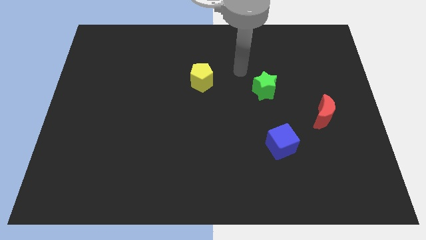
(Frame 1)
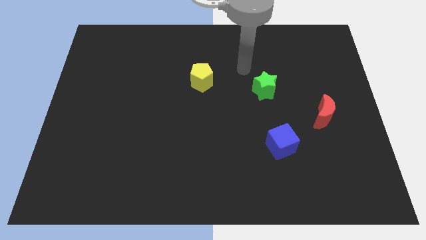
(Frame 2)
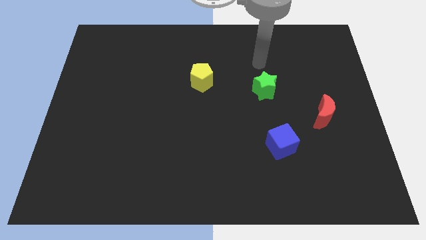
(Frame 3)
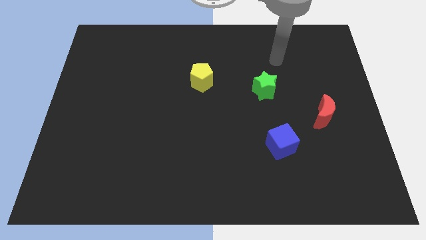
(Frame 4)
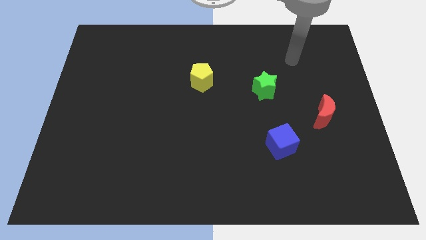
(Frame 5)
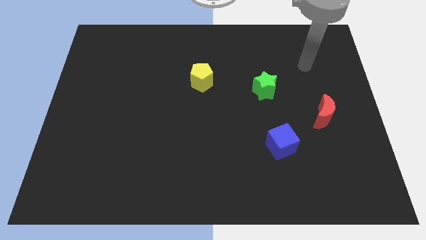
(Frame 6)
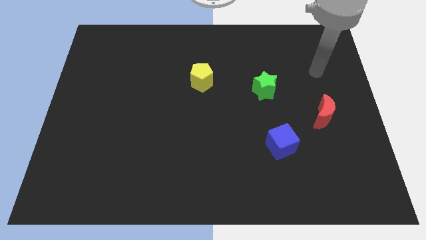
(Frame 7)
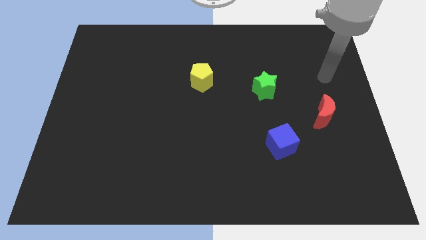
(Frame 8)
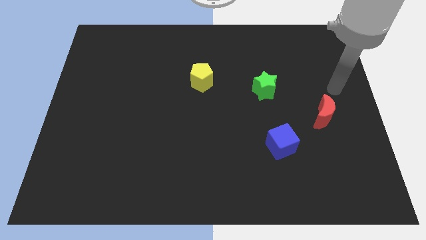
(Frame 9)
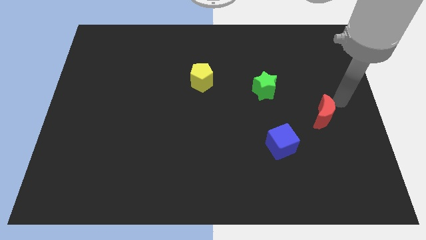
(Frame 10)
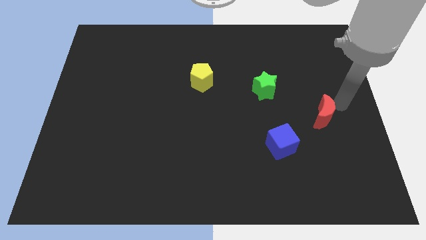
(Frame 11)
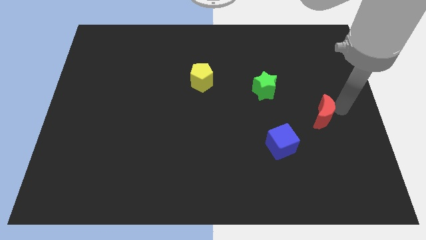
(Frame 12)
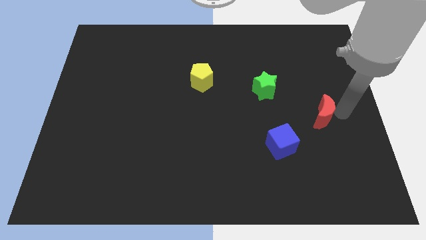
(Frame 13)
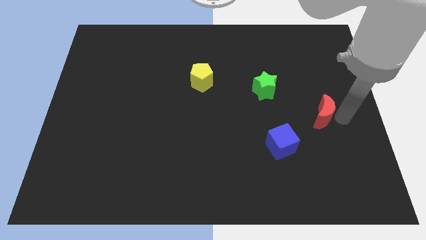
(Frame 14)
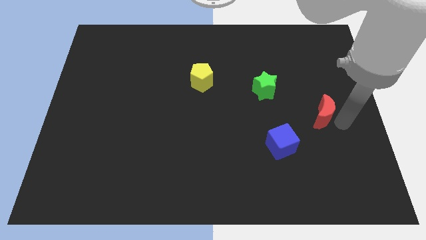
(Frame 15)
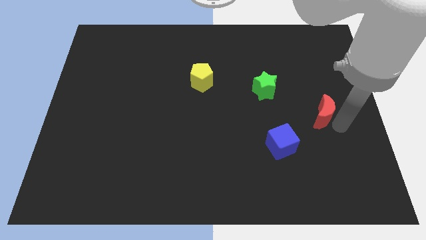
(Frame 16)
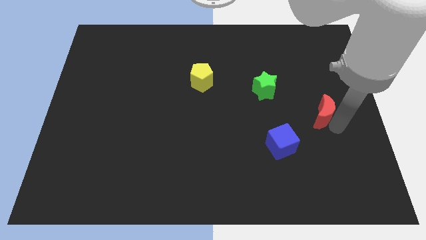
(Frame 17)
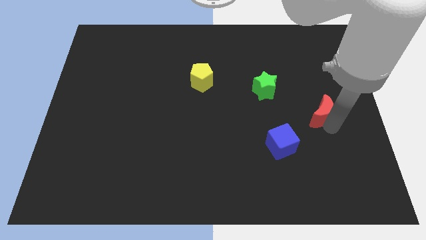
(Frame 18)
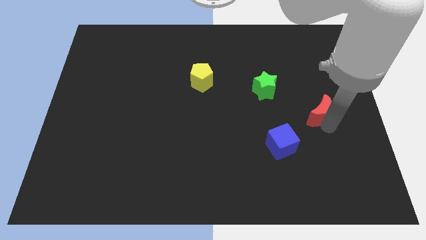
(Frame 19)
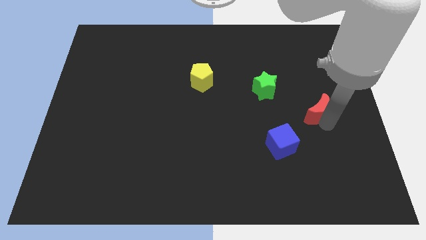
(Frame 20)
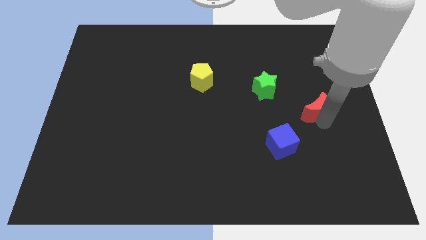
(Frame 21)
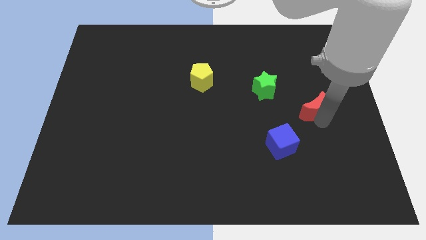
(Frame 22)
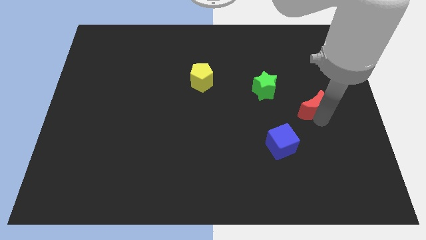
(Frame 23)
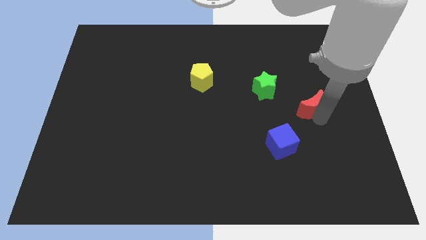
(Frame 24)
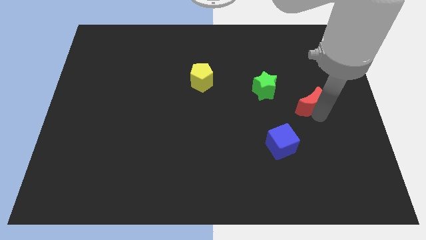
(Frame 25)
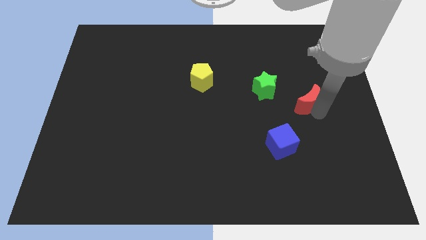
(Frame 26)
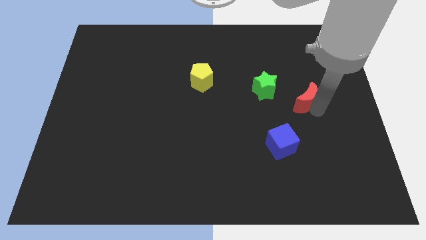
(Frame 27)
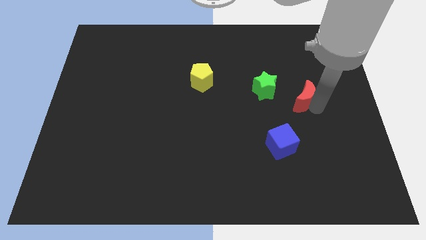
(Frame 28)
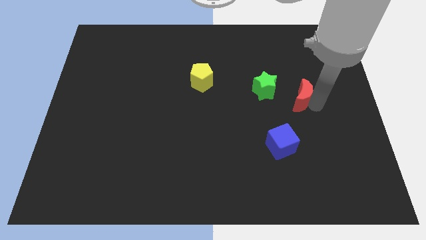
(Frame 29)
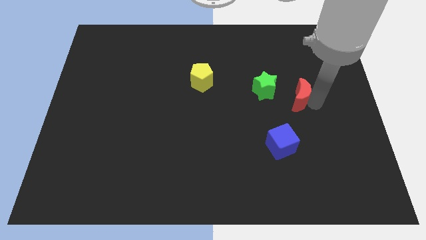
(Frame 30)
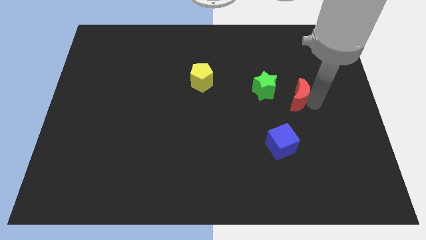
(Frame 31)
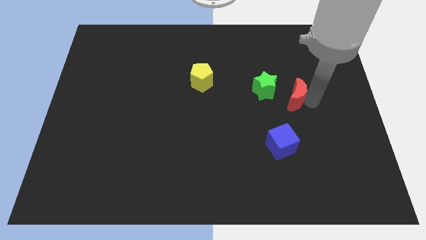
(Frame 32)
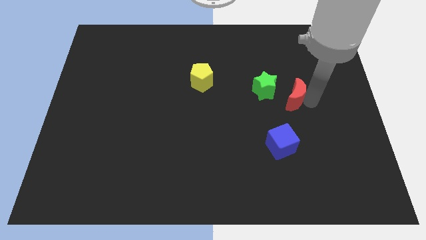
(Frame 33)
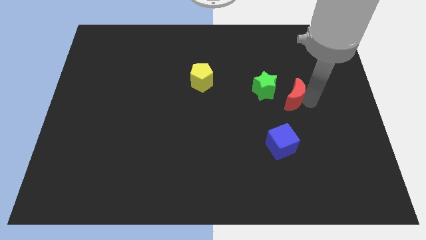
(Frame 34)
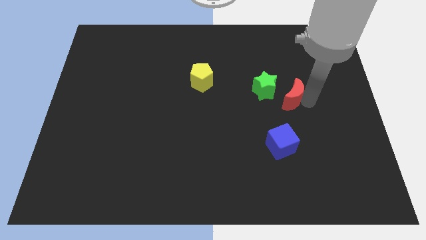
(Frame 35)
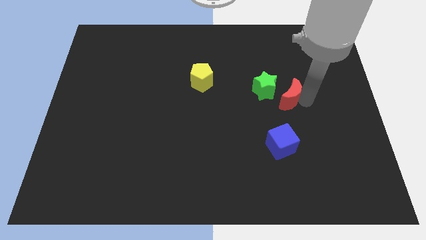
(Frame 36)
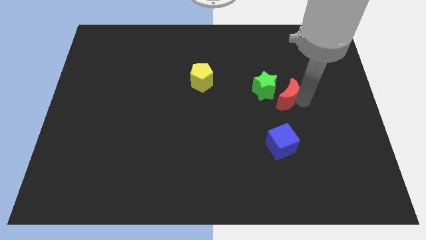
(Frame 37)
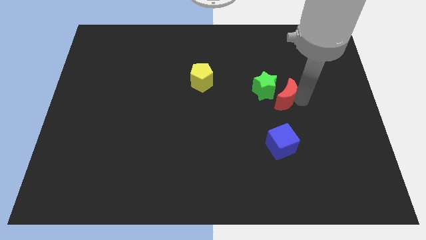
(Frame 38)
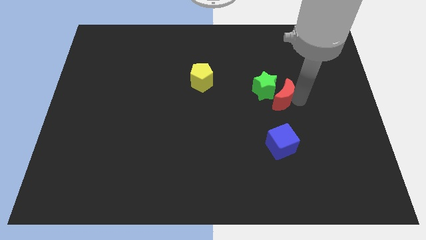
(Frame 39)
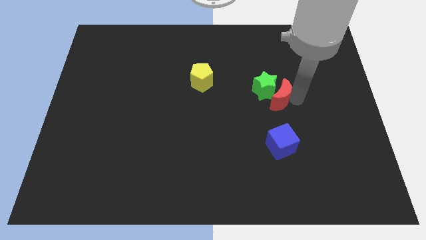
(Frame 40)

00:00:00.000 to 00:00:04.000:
put the moon to the green block

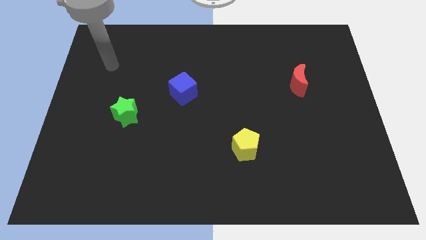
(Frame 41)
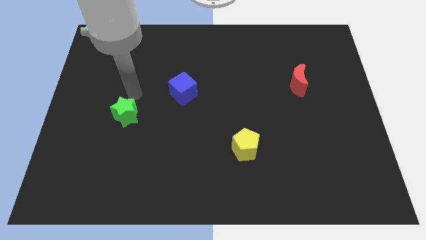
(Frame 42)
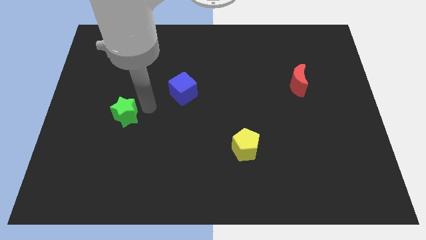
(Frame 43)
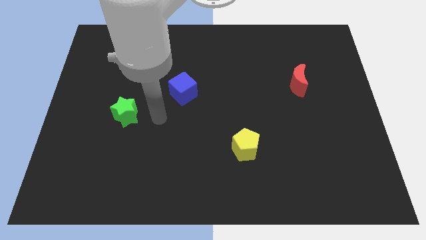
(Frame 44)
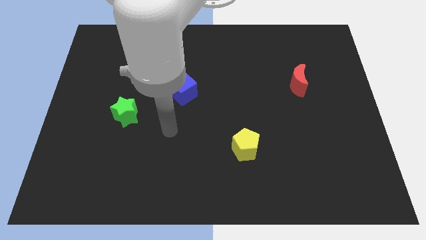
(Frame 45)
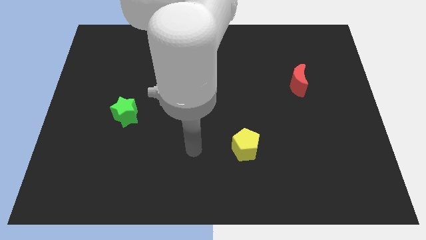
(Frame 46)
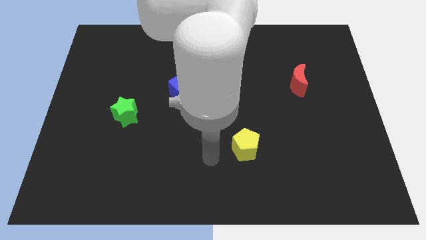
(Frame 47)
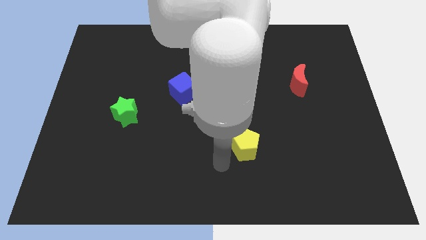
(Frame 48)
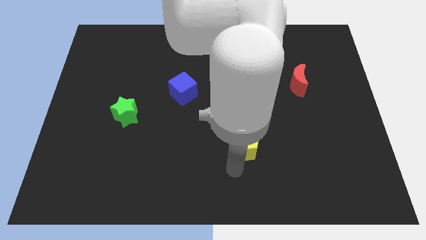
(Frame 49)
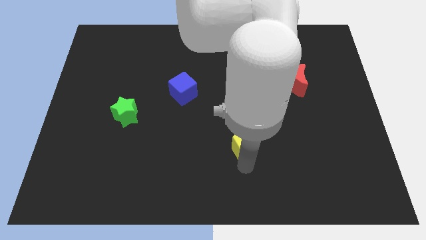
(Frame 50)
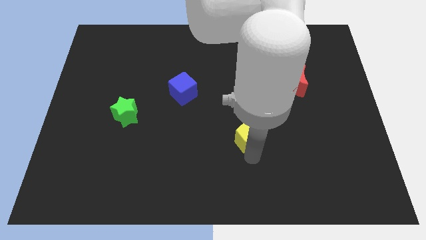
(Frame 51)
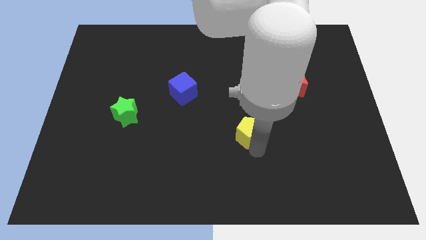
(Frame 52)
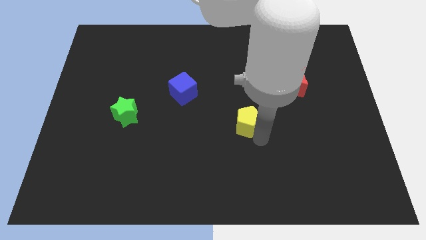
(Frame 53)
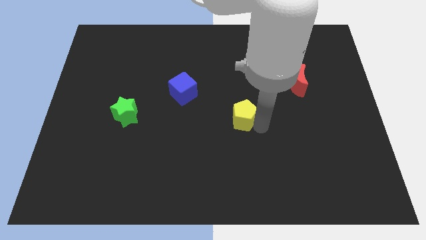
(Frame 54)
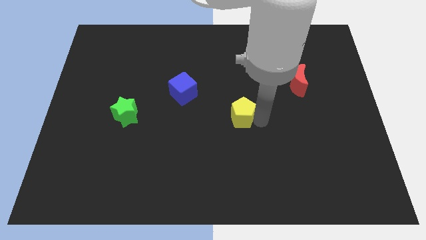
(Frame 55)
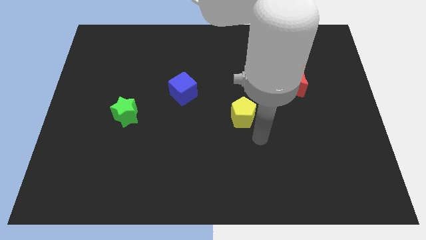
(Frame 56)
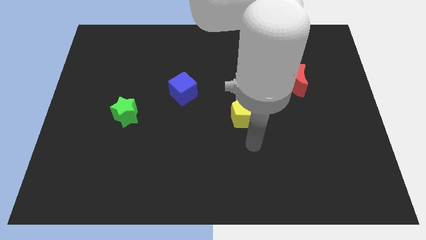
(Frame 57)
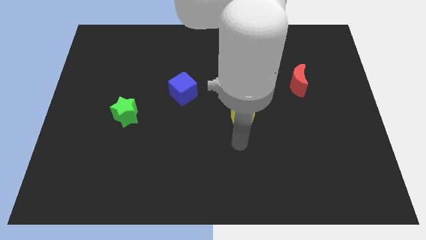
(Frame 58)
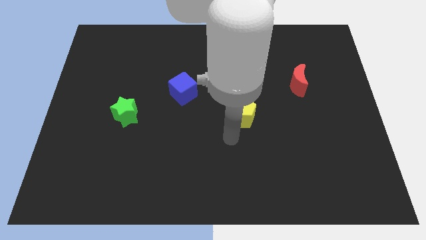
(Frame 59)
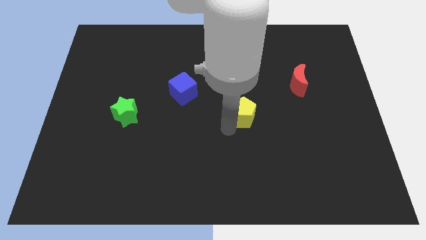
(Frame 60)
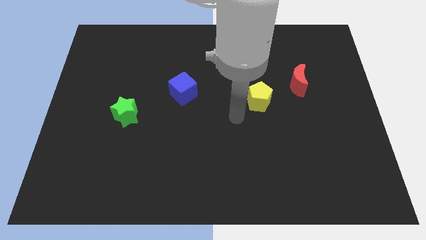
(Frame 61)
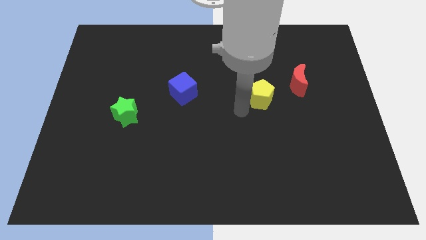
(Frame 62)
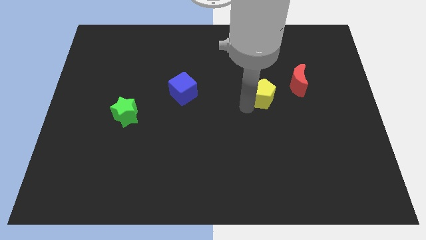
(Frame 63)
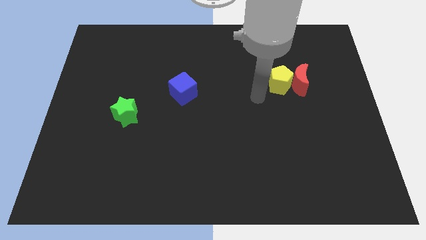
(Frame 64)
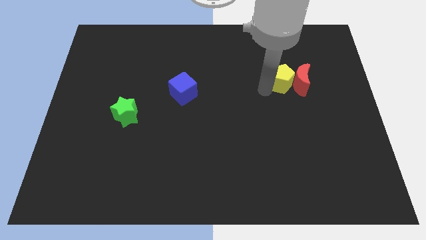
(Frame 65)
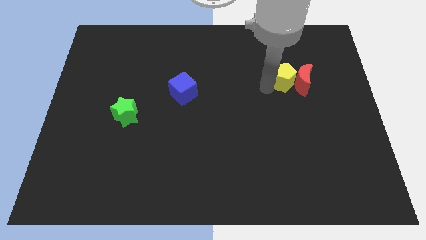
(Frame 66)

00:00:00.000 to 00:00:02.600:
slide the yellow block to the moon

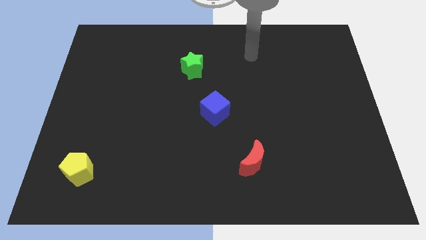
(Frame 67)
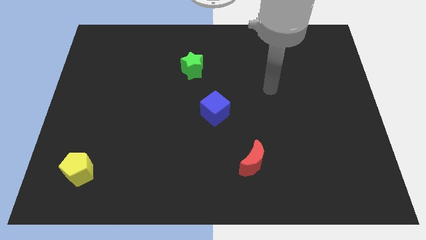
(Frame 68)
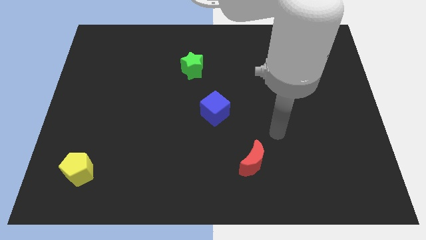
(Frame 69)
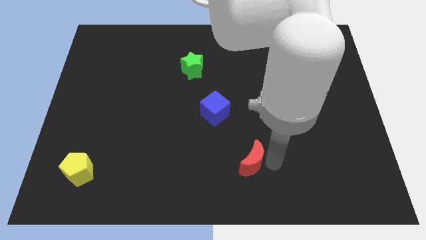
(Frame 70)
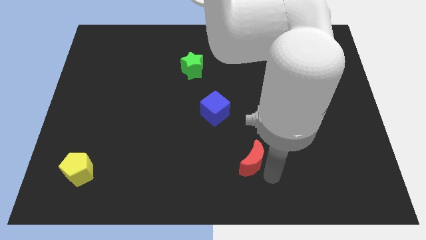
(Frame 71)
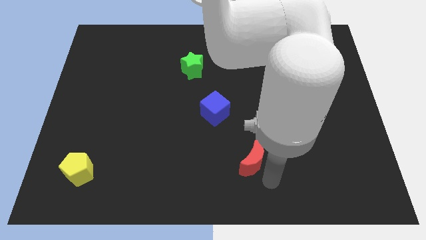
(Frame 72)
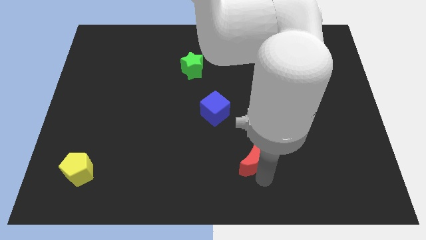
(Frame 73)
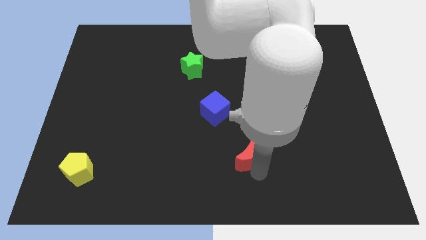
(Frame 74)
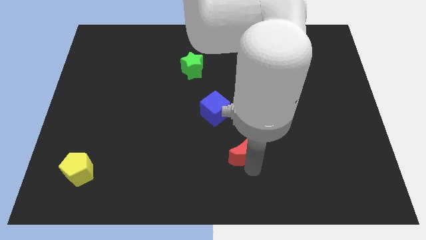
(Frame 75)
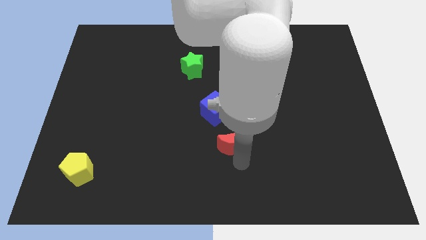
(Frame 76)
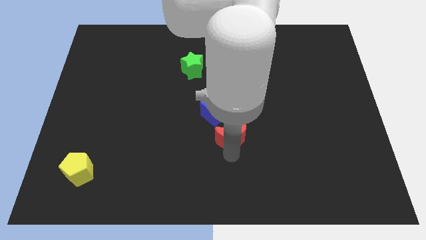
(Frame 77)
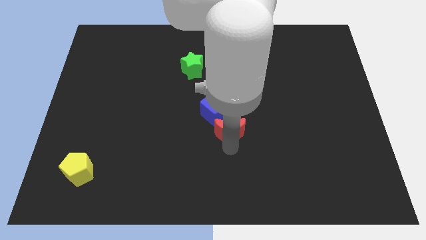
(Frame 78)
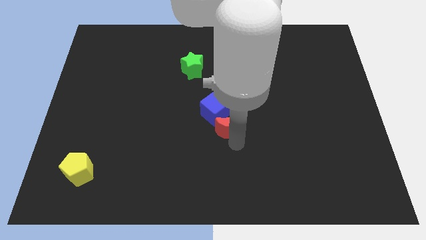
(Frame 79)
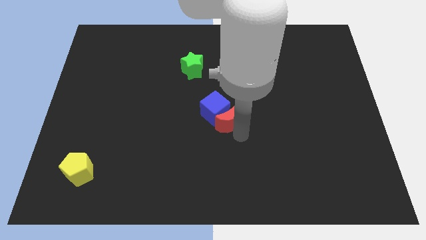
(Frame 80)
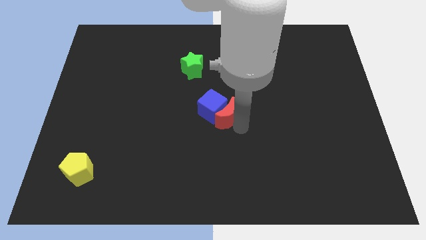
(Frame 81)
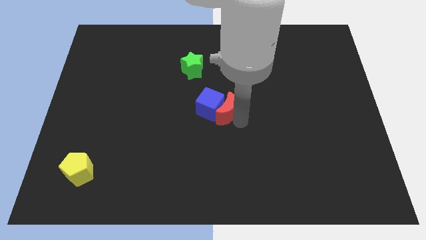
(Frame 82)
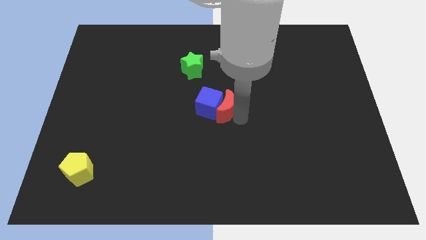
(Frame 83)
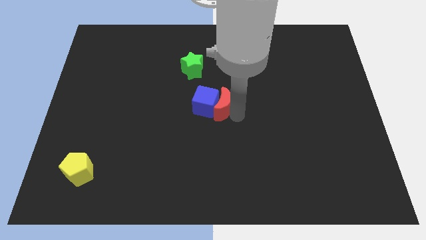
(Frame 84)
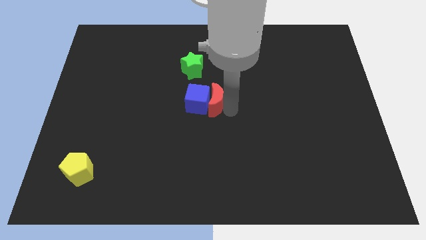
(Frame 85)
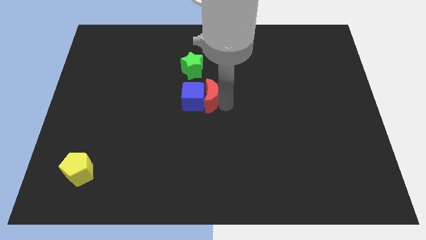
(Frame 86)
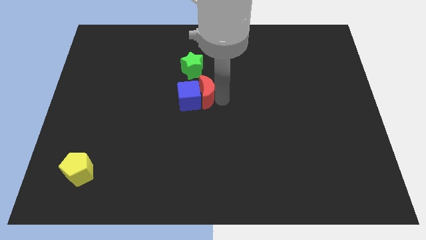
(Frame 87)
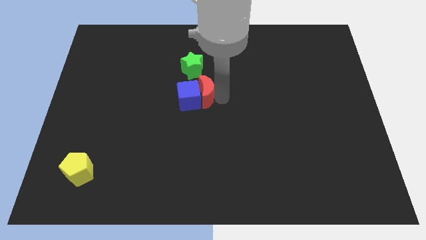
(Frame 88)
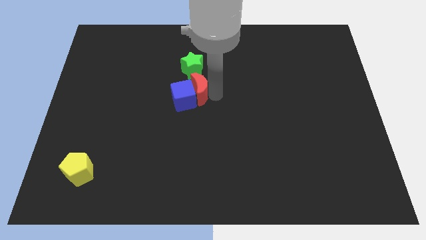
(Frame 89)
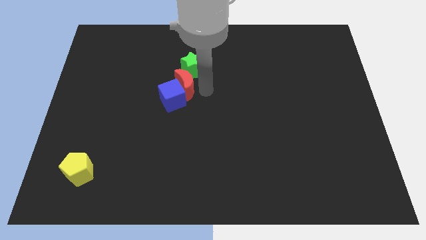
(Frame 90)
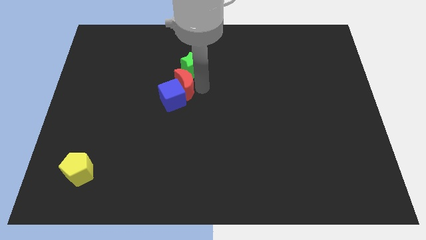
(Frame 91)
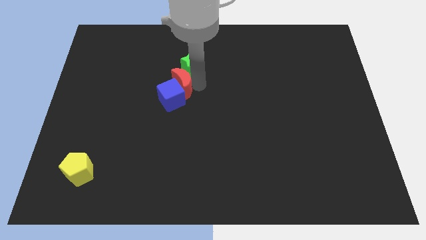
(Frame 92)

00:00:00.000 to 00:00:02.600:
push the red moon next to the green block
